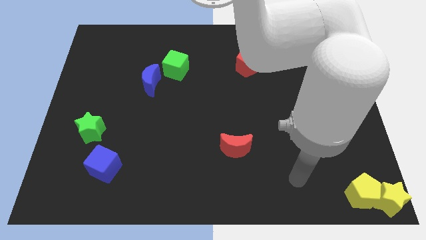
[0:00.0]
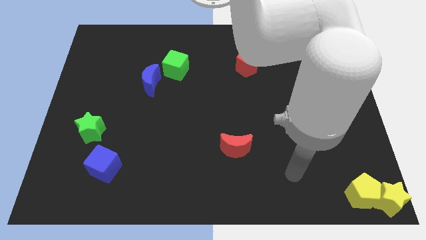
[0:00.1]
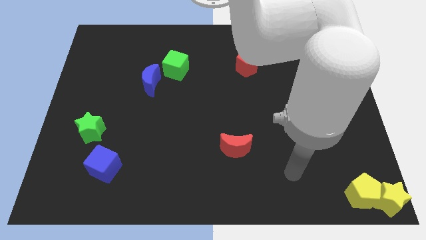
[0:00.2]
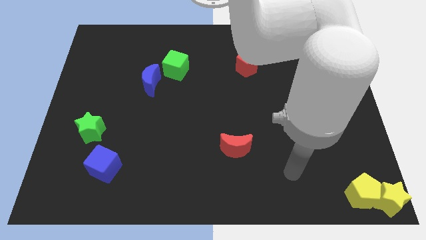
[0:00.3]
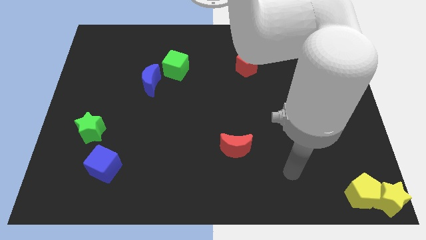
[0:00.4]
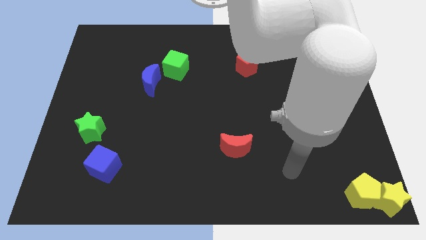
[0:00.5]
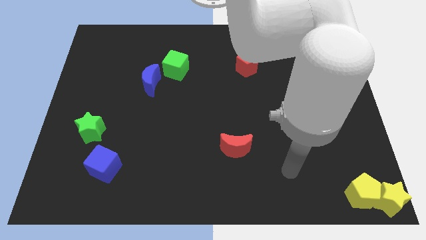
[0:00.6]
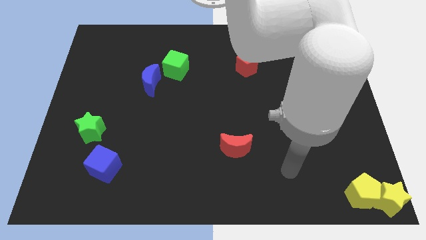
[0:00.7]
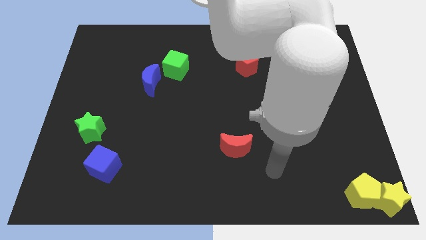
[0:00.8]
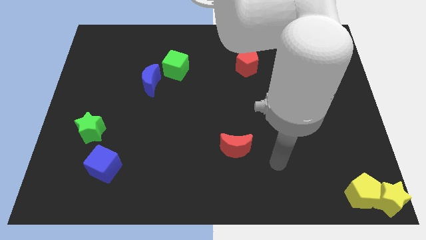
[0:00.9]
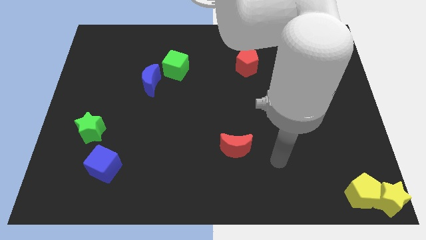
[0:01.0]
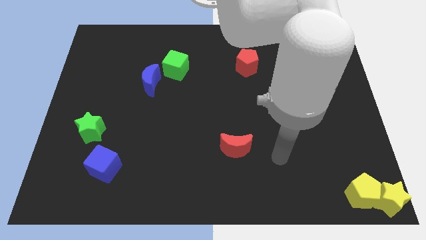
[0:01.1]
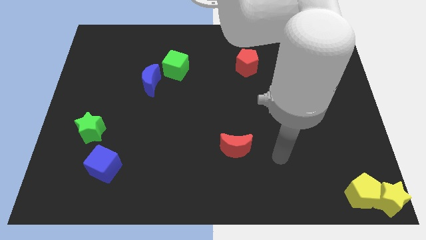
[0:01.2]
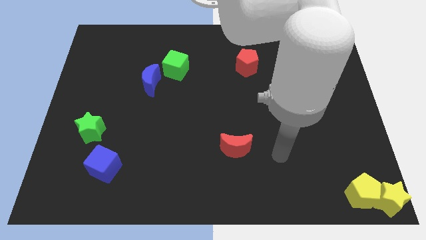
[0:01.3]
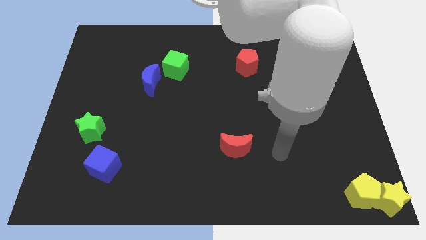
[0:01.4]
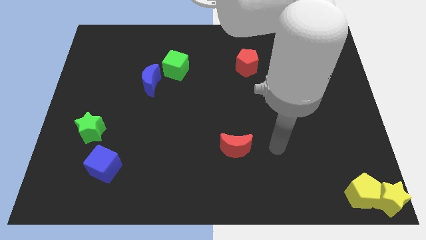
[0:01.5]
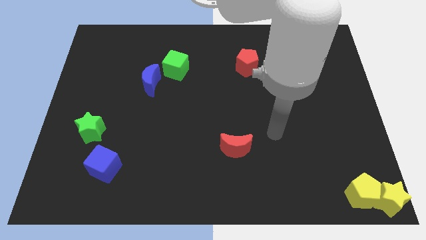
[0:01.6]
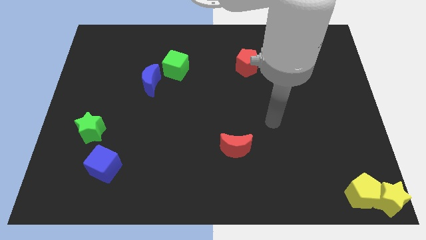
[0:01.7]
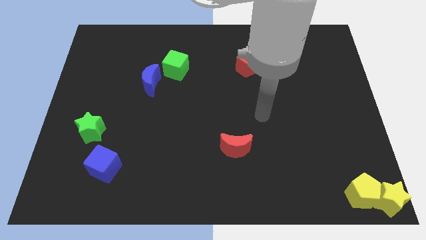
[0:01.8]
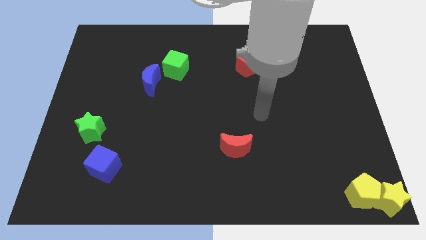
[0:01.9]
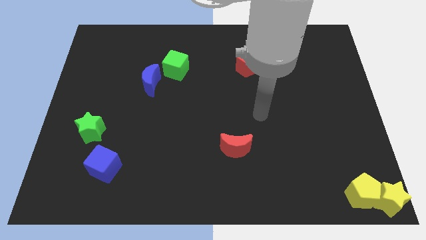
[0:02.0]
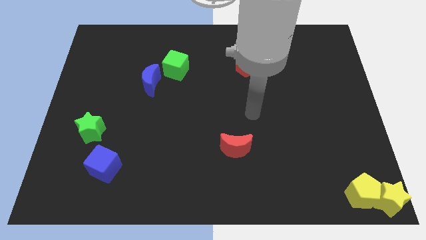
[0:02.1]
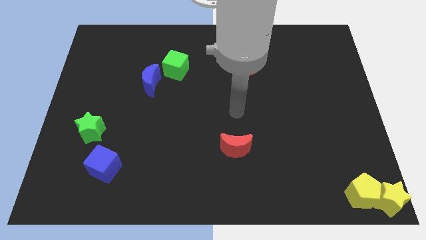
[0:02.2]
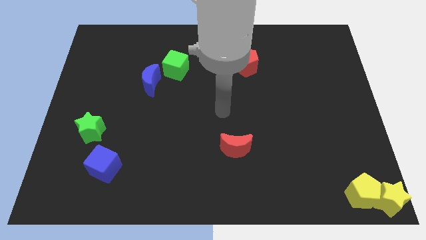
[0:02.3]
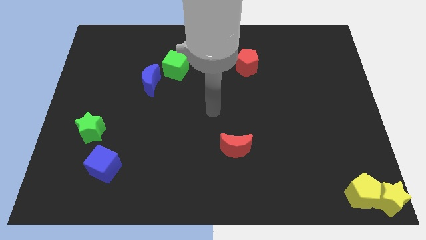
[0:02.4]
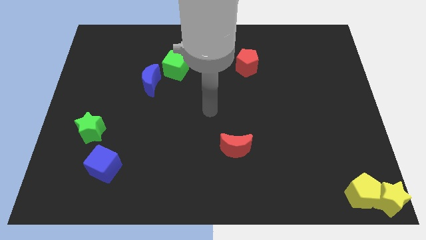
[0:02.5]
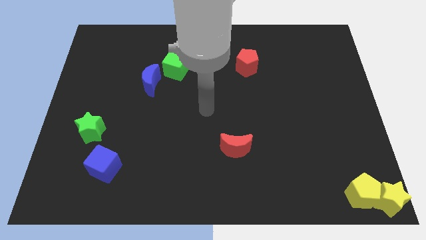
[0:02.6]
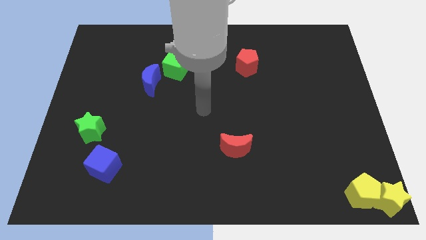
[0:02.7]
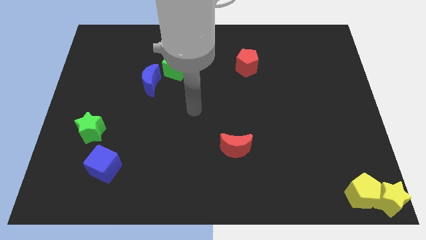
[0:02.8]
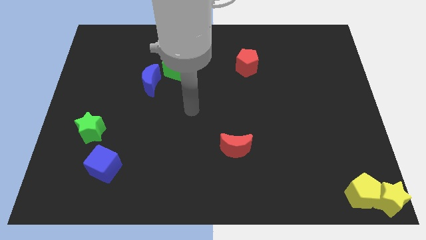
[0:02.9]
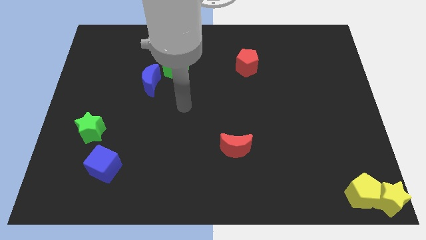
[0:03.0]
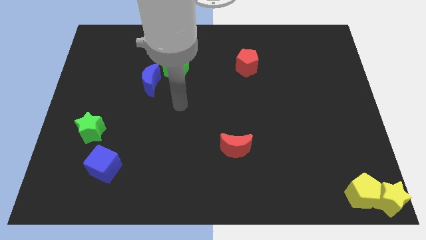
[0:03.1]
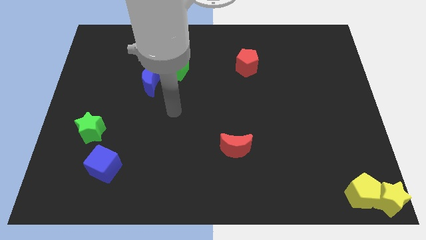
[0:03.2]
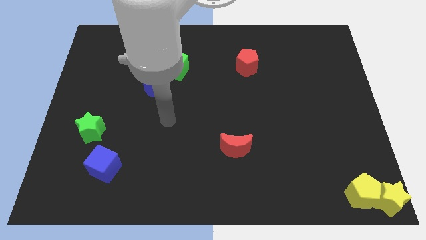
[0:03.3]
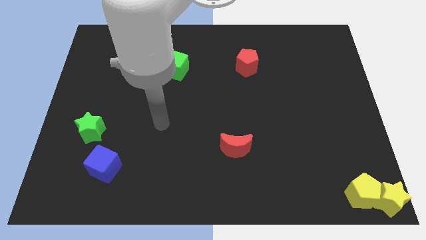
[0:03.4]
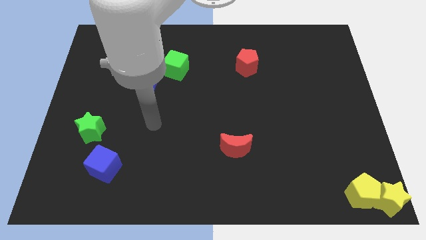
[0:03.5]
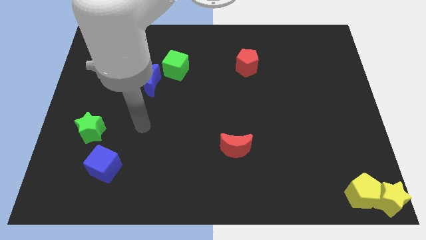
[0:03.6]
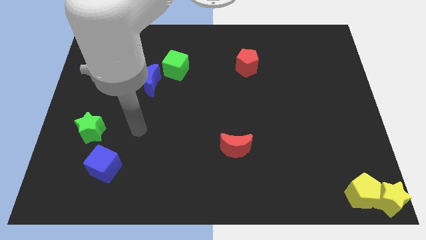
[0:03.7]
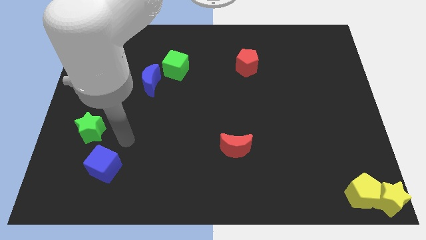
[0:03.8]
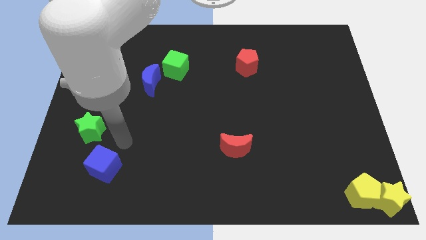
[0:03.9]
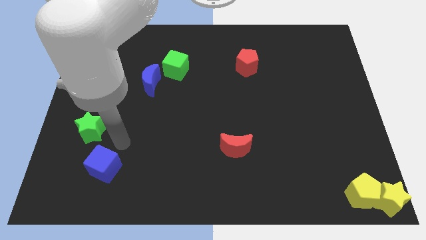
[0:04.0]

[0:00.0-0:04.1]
move the arm towards the top of the blue cube

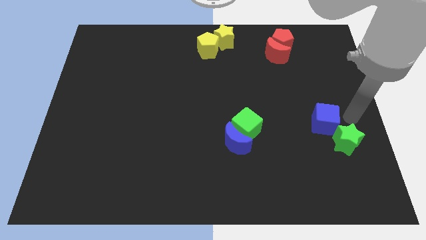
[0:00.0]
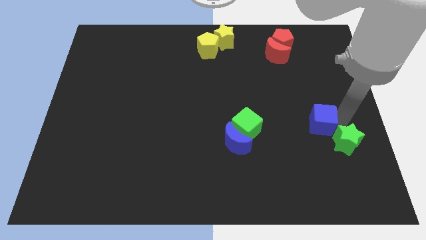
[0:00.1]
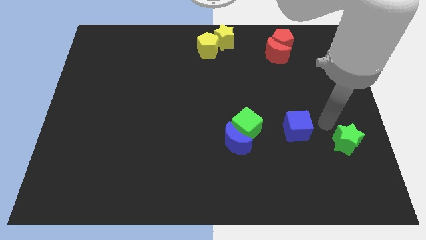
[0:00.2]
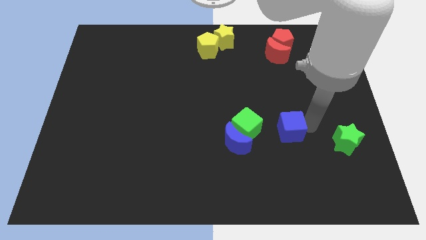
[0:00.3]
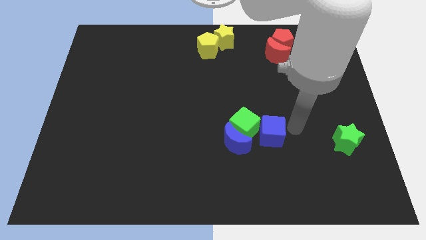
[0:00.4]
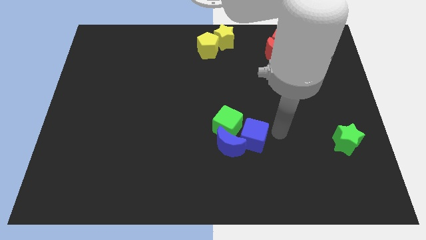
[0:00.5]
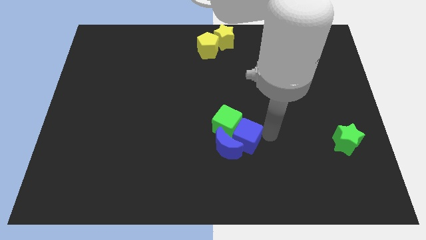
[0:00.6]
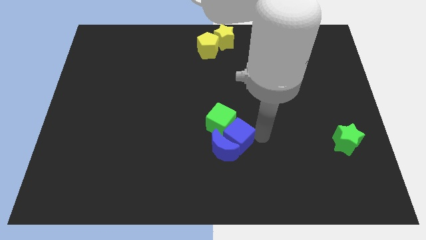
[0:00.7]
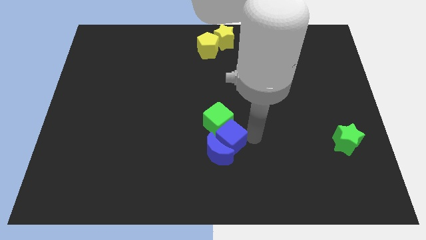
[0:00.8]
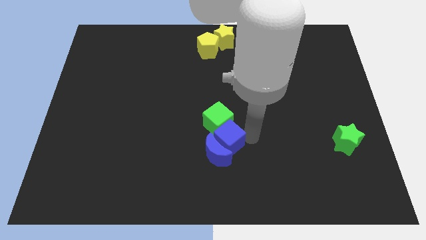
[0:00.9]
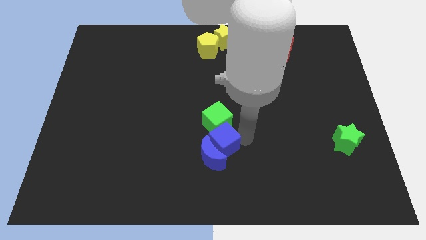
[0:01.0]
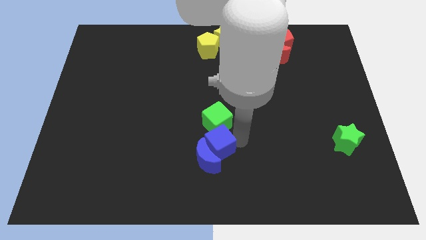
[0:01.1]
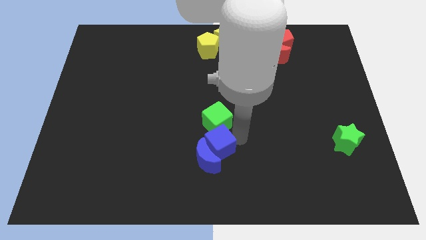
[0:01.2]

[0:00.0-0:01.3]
place the blue cube in between the green cube and blue moon

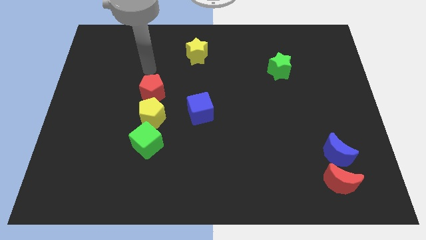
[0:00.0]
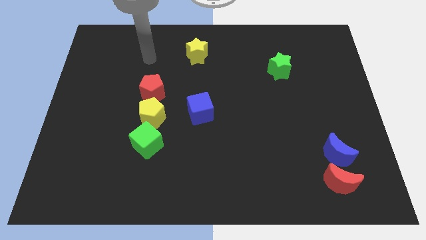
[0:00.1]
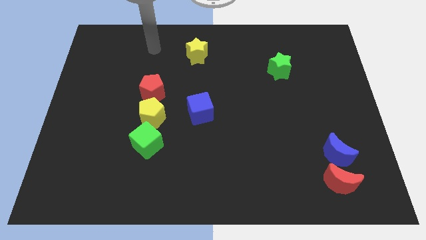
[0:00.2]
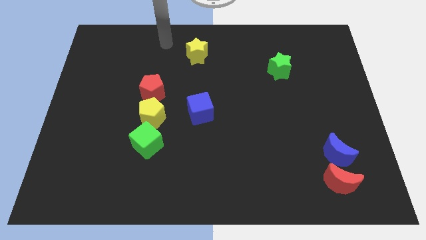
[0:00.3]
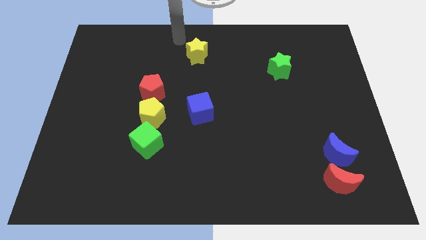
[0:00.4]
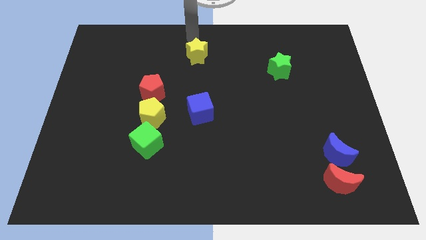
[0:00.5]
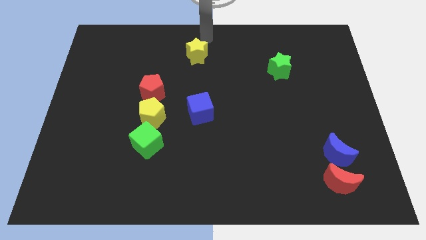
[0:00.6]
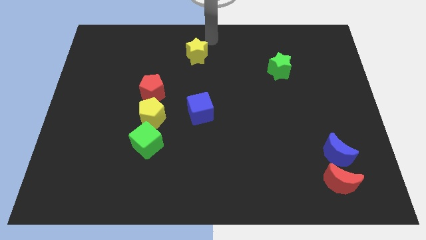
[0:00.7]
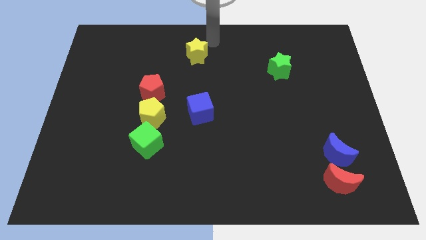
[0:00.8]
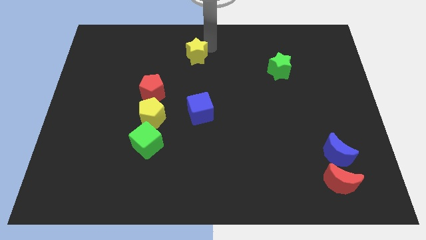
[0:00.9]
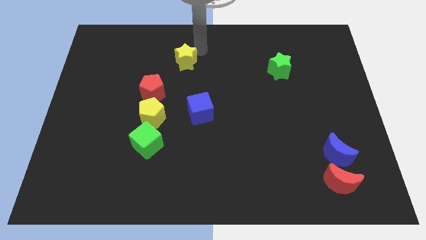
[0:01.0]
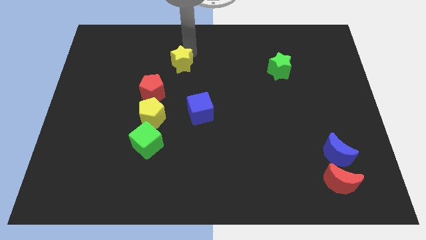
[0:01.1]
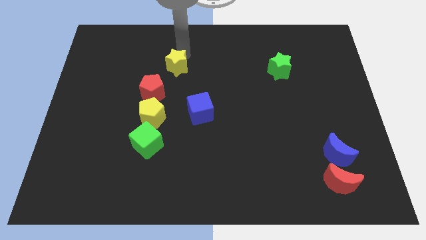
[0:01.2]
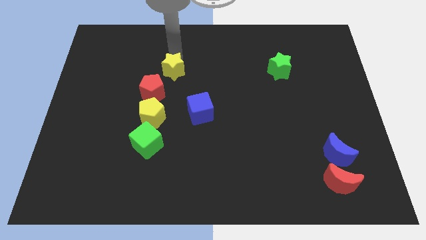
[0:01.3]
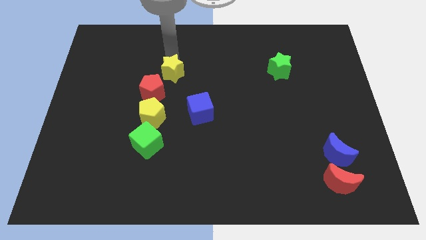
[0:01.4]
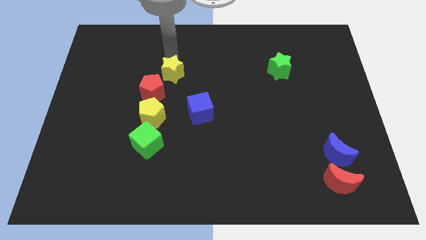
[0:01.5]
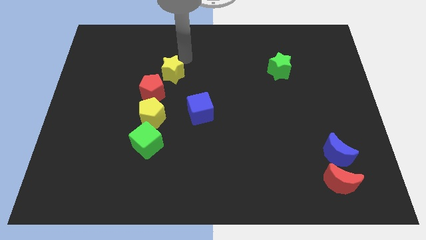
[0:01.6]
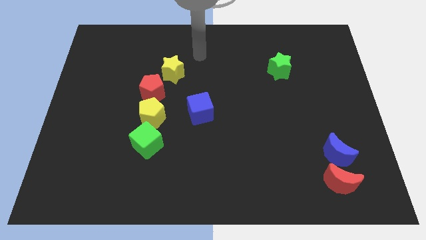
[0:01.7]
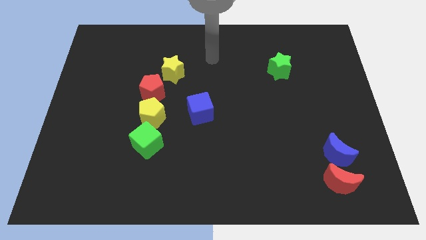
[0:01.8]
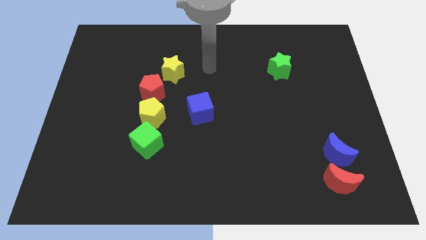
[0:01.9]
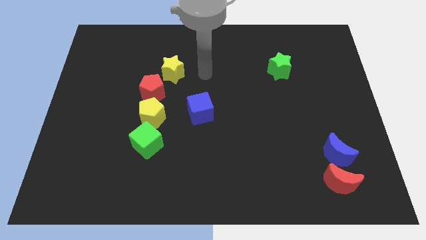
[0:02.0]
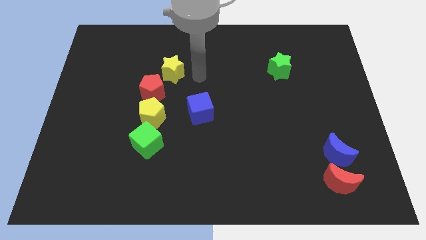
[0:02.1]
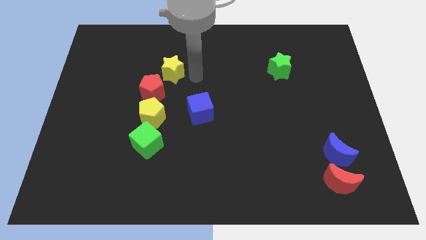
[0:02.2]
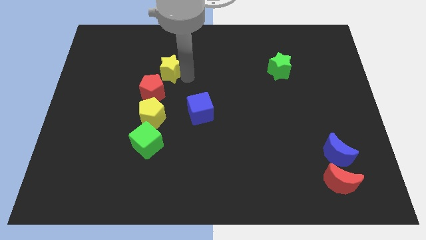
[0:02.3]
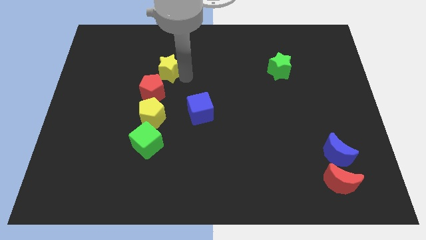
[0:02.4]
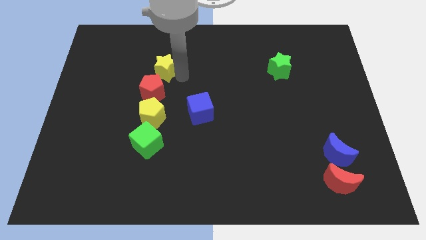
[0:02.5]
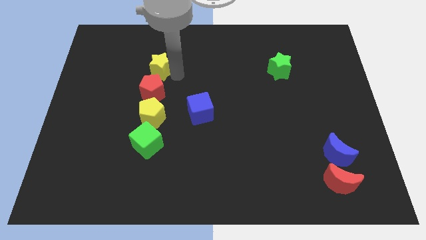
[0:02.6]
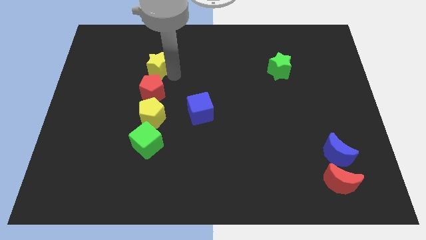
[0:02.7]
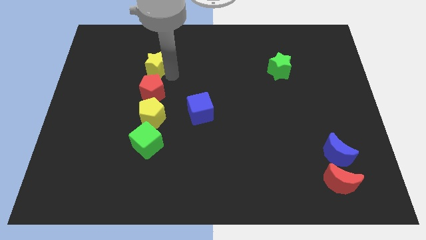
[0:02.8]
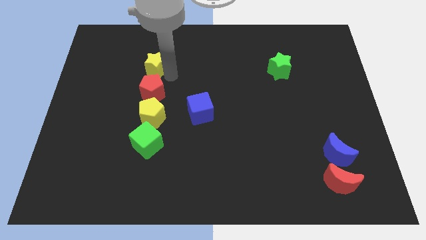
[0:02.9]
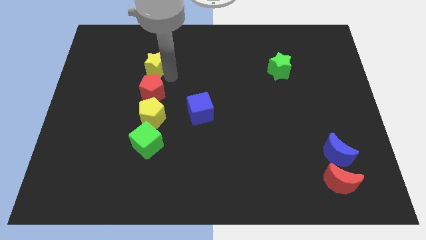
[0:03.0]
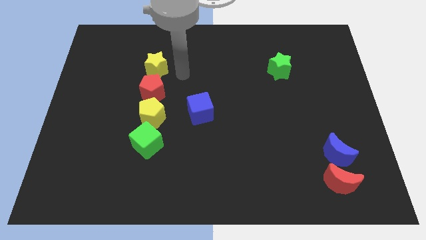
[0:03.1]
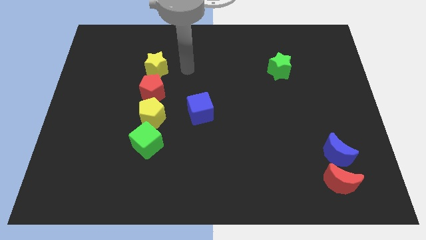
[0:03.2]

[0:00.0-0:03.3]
place the yellow star vertically above the top side of the red pentagon

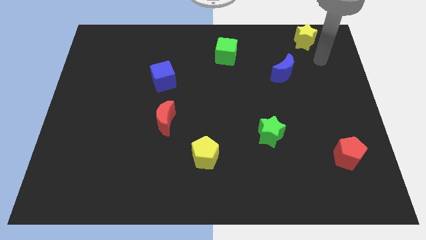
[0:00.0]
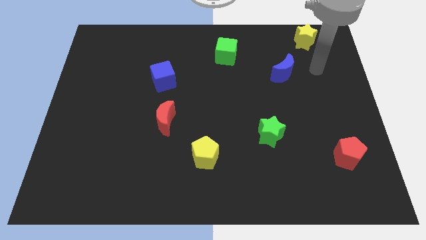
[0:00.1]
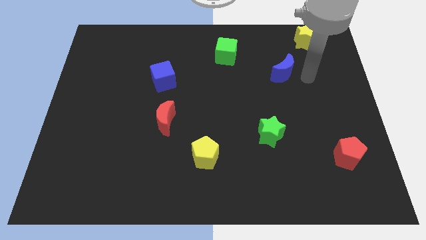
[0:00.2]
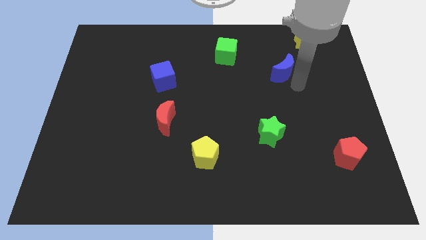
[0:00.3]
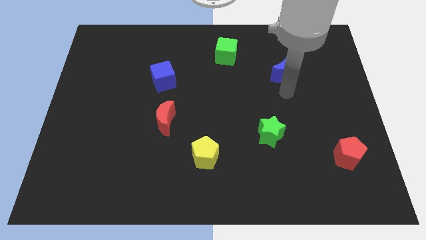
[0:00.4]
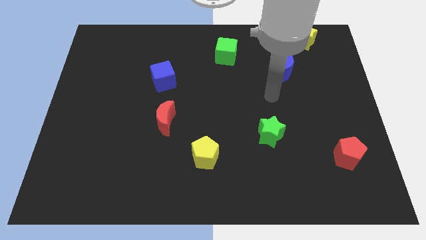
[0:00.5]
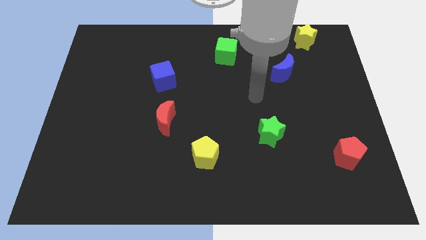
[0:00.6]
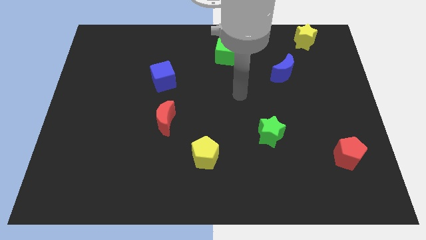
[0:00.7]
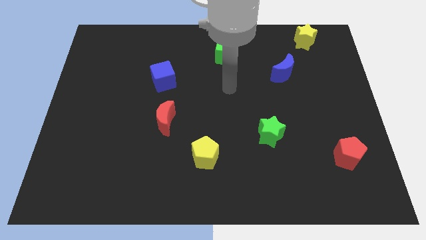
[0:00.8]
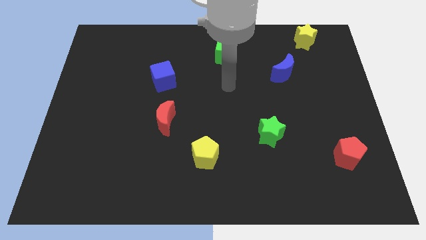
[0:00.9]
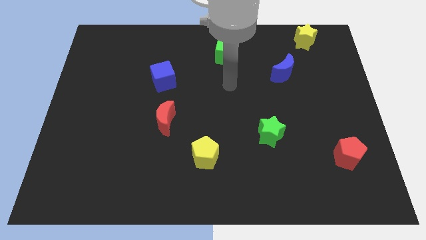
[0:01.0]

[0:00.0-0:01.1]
move your arm near to the center of the board
